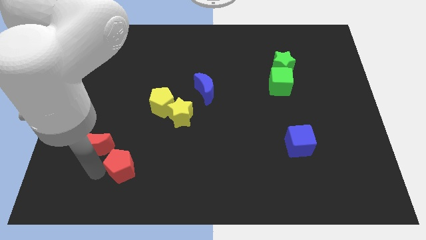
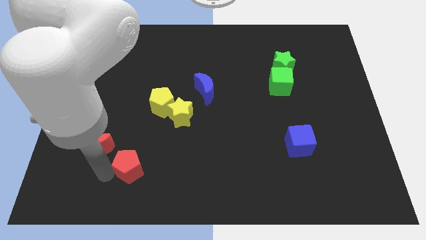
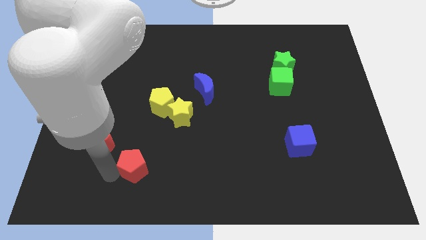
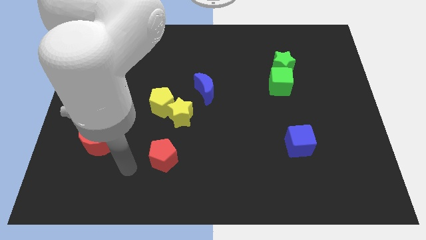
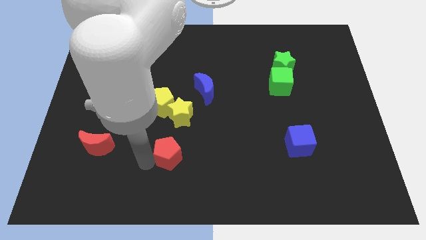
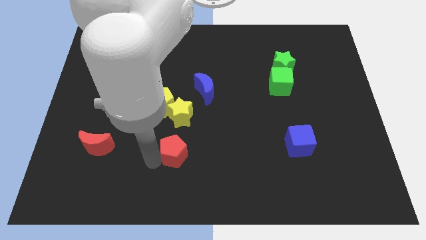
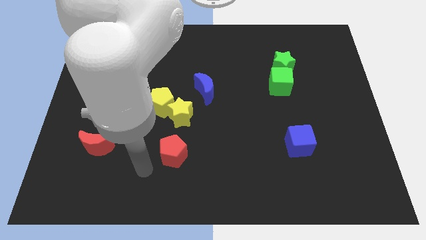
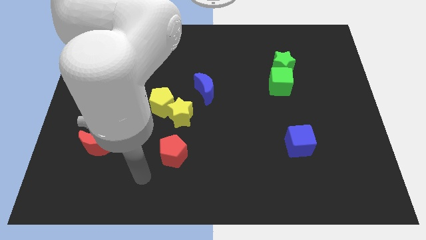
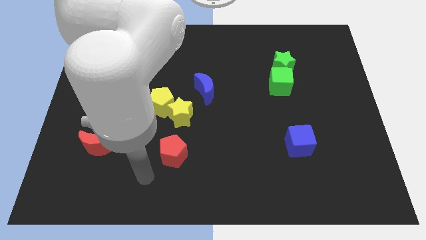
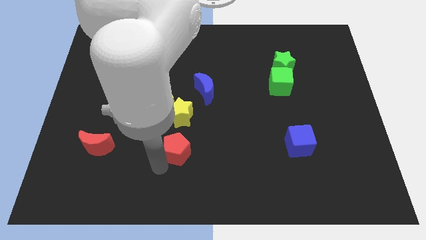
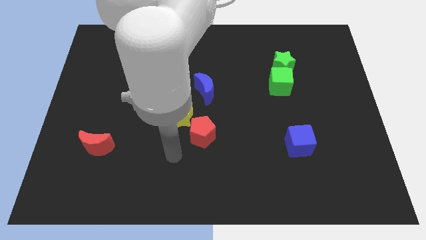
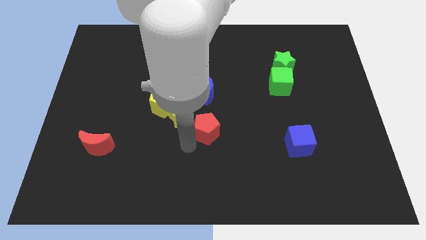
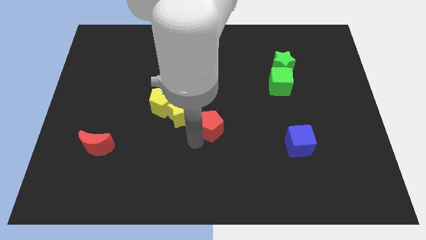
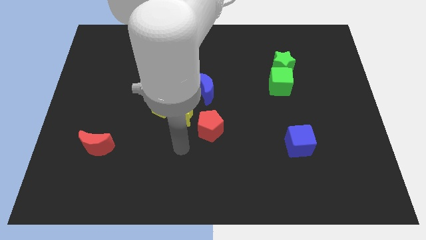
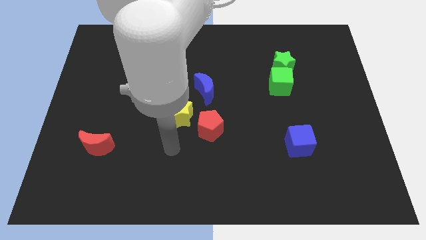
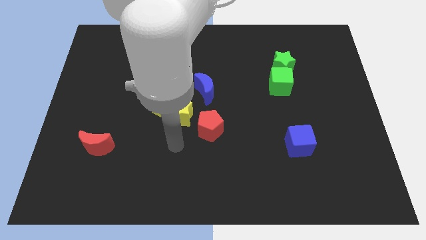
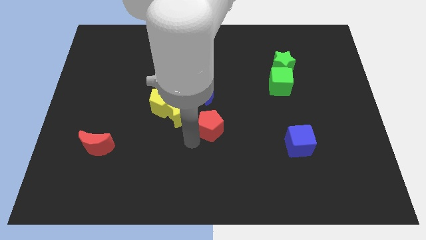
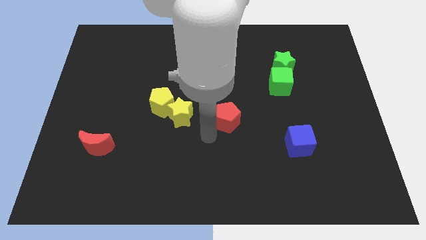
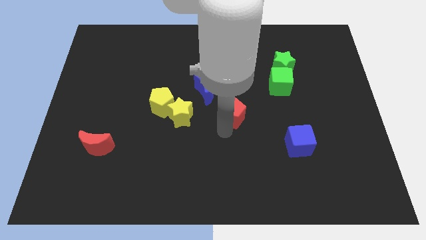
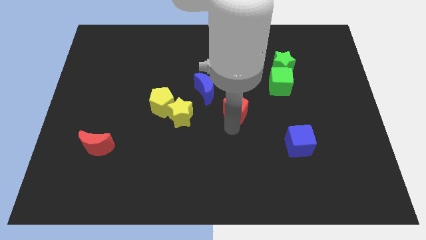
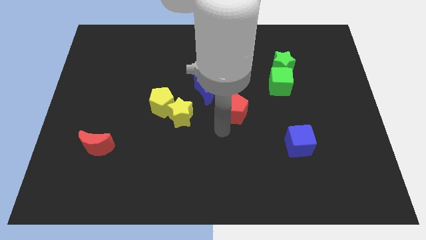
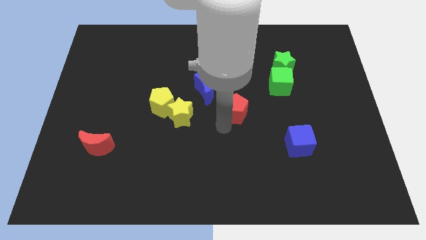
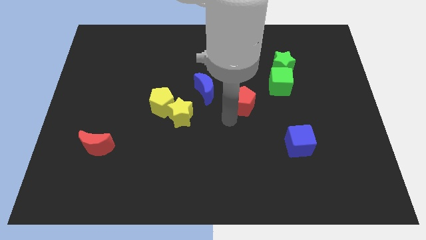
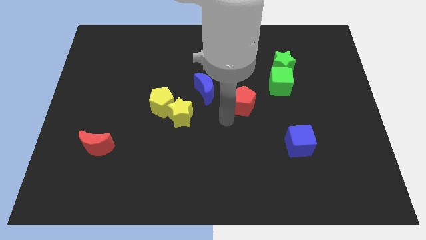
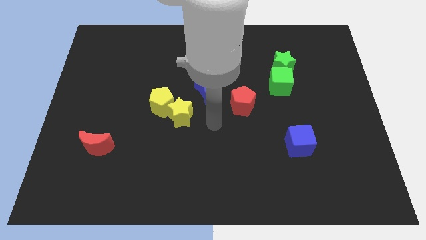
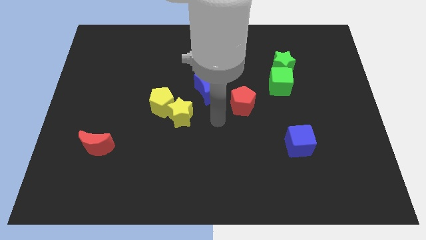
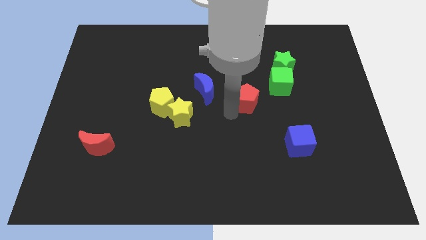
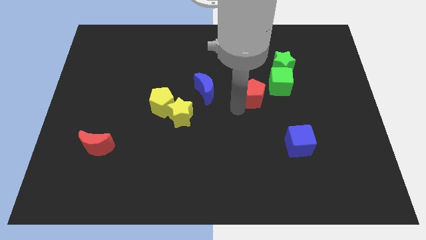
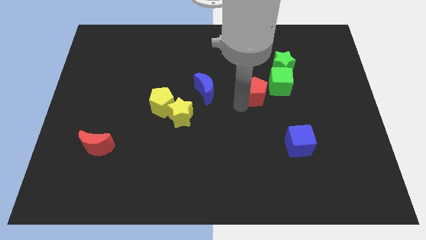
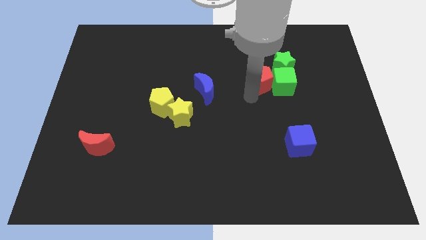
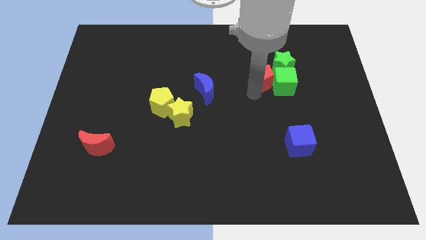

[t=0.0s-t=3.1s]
push the red pentagon in to the green cube

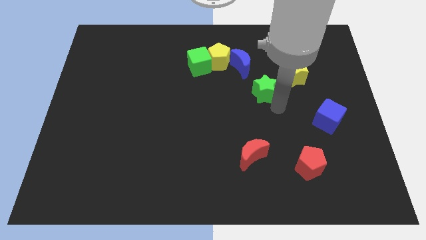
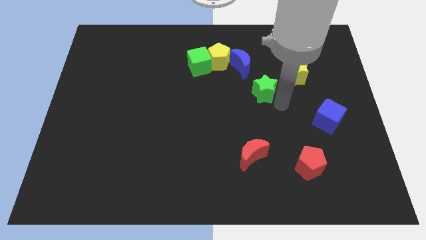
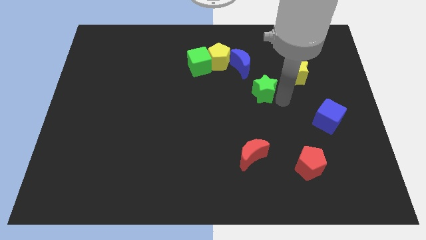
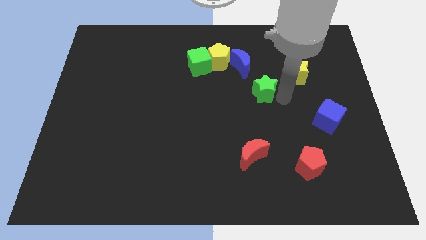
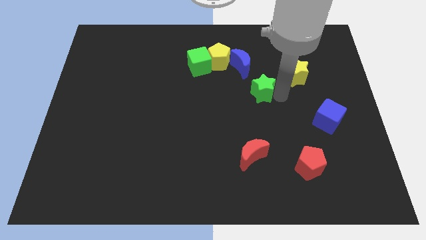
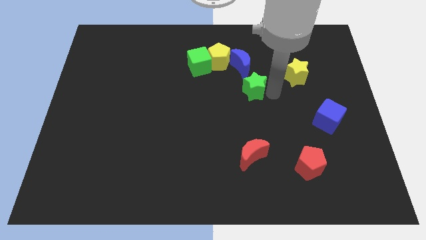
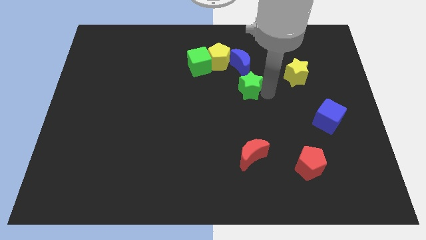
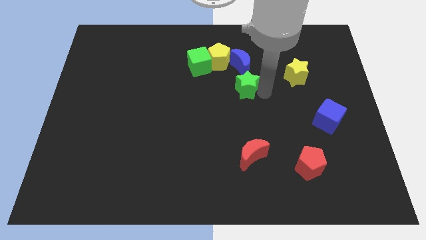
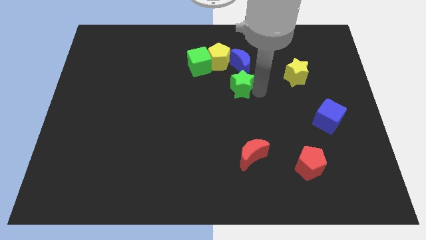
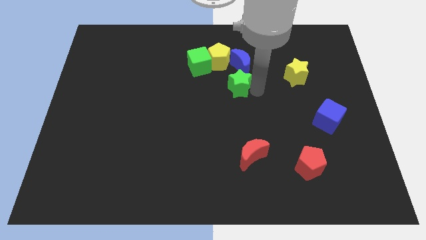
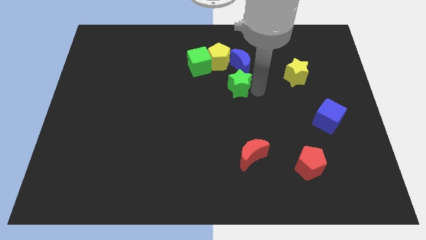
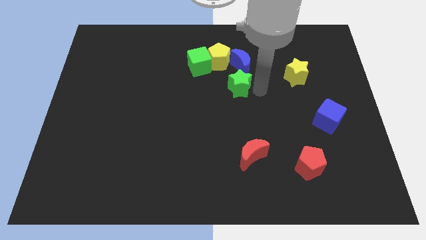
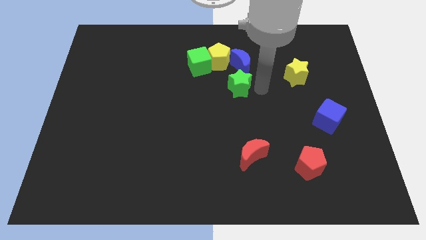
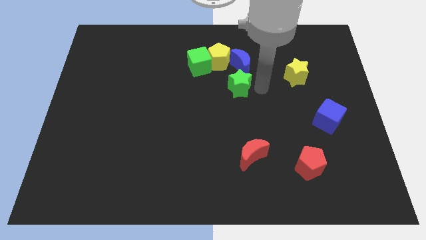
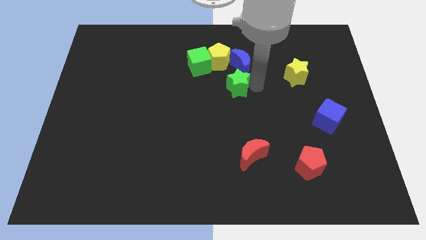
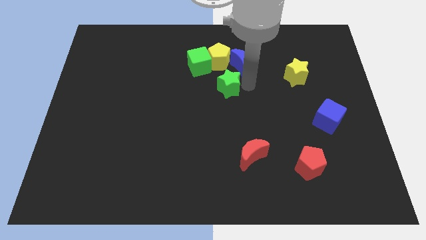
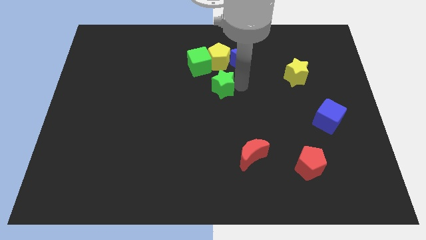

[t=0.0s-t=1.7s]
move the green star to the bottom of the yellow pentagon

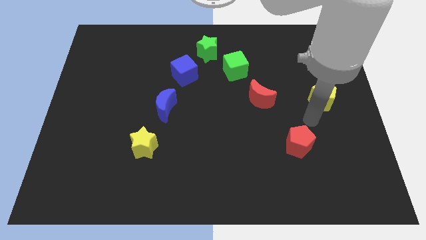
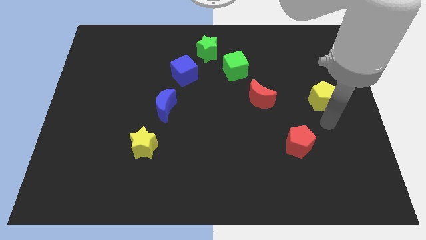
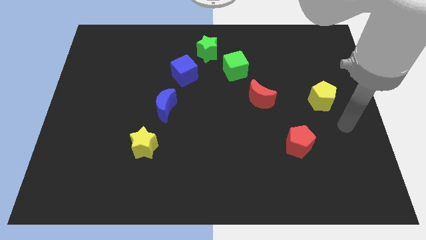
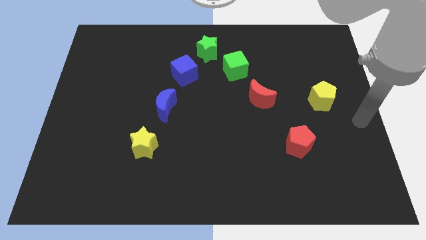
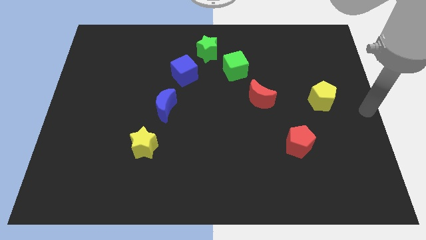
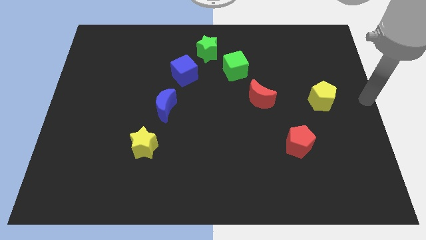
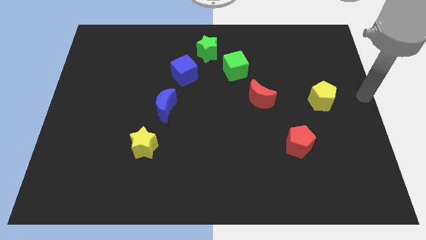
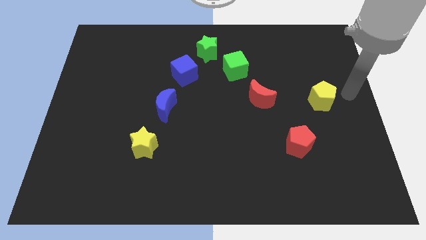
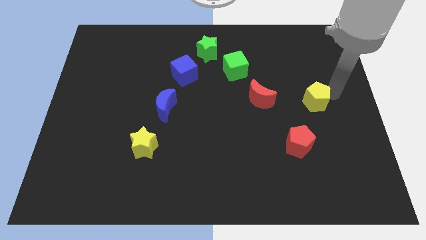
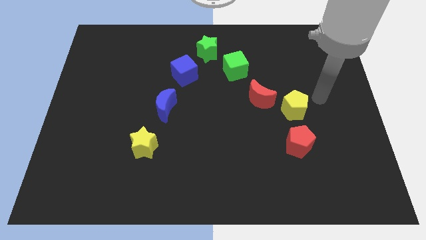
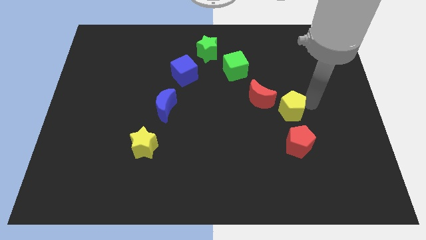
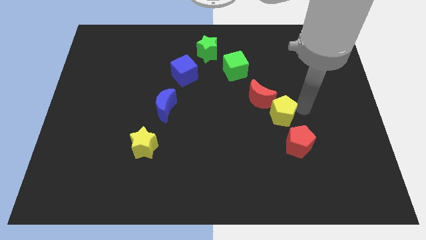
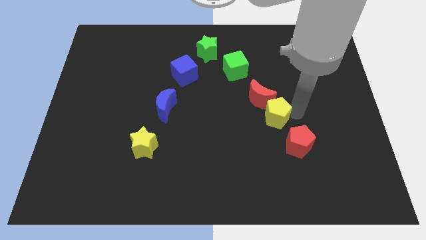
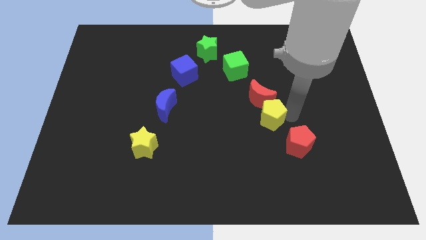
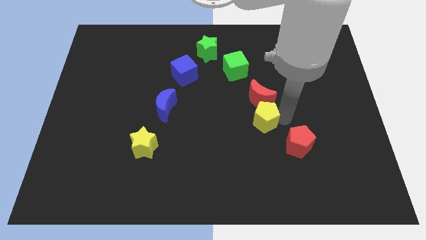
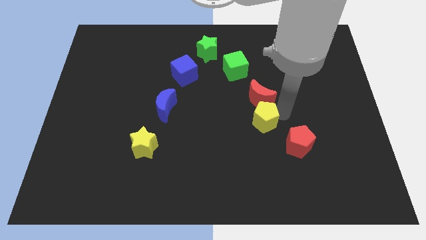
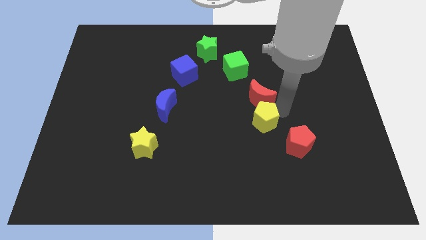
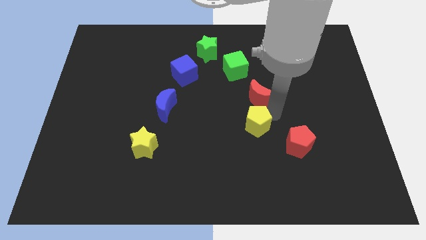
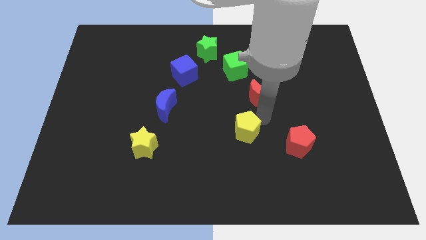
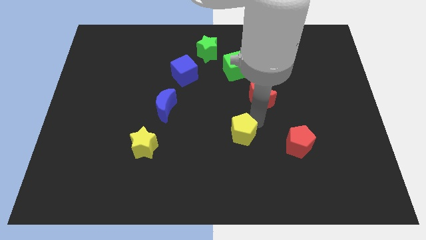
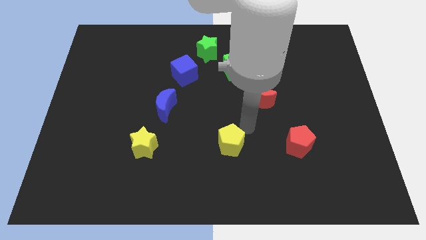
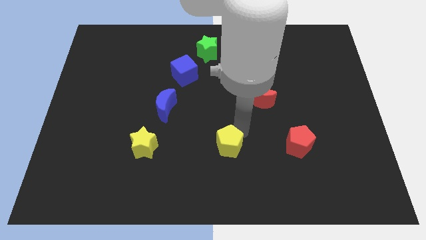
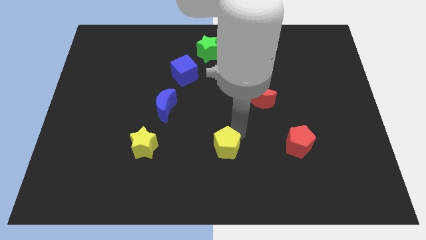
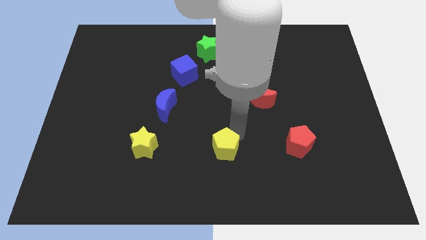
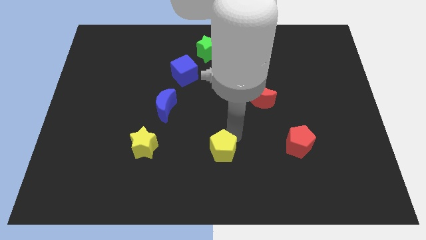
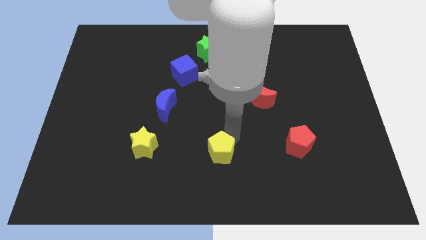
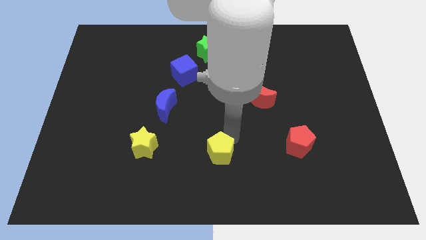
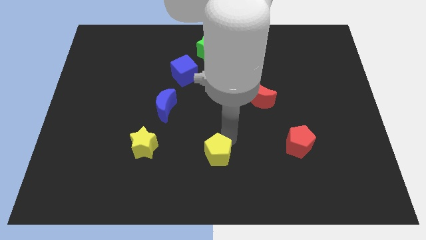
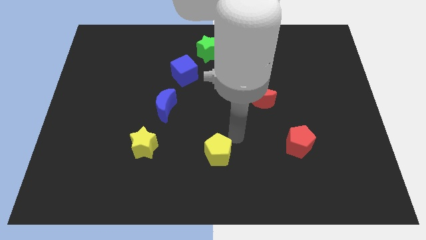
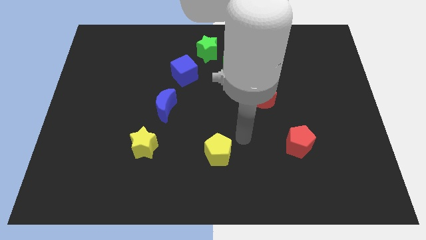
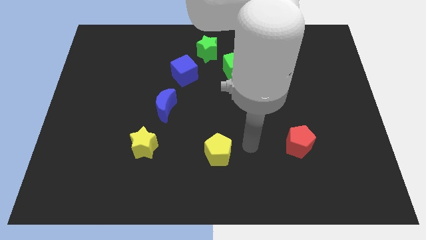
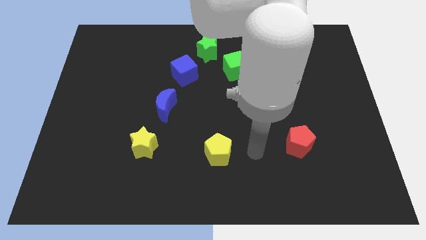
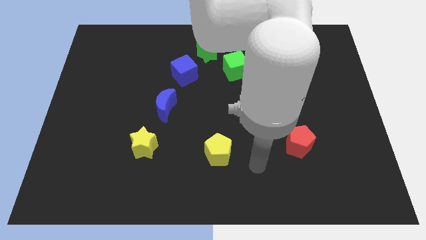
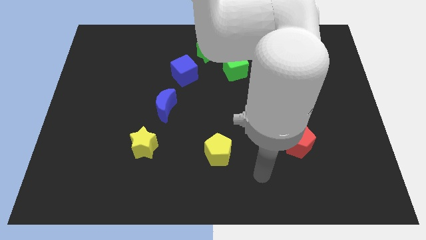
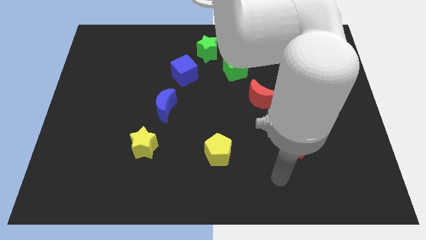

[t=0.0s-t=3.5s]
place the yellow pentagon in between yellow star and red pentagon

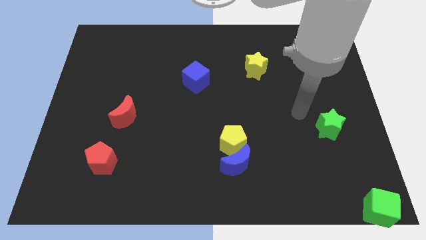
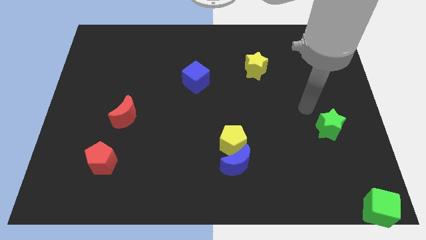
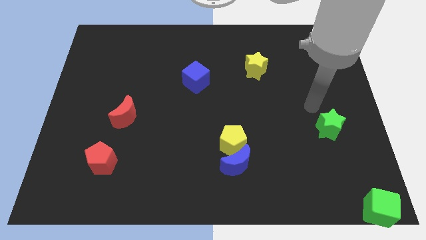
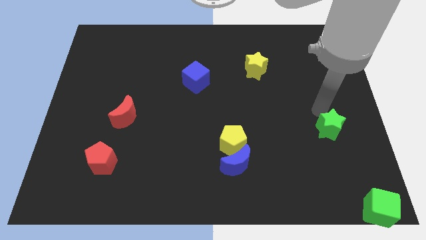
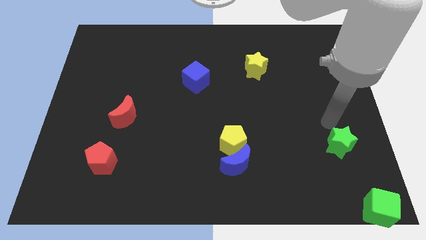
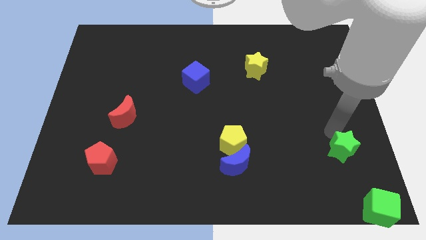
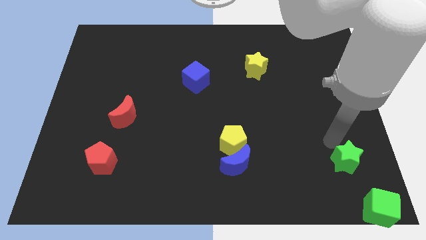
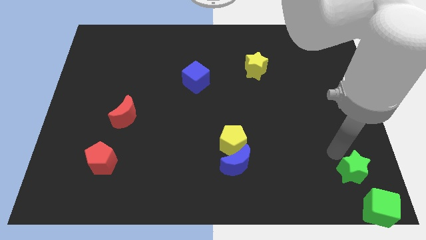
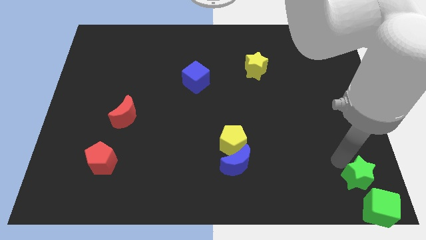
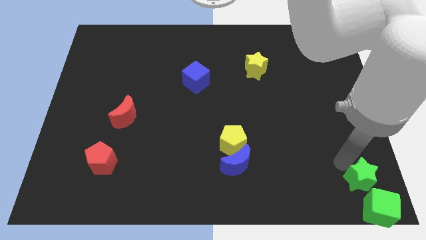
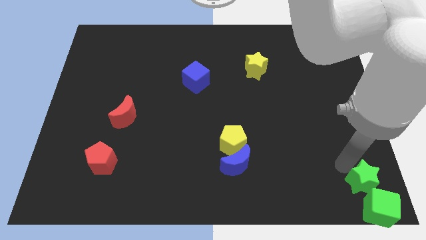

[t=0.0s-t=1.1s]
move the green star close to the green cube
